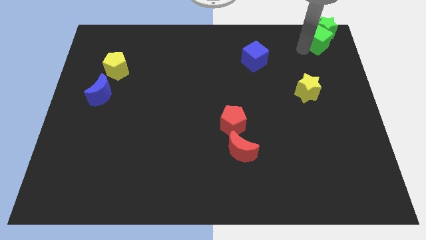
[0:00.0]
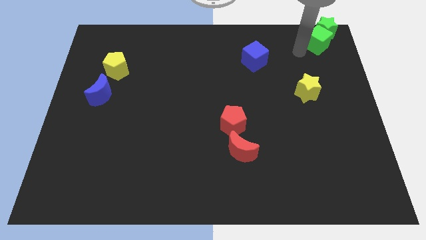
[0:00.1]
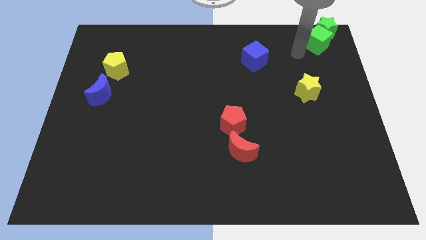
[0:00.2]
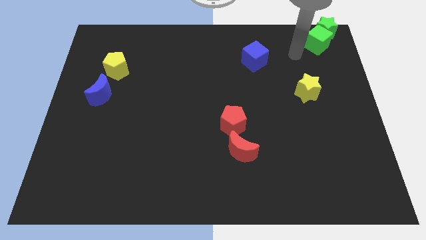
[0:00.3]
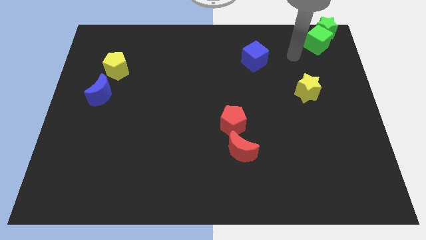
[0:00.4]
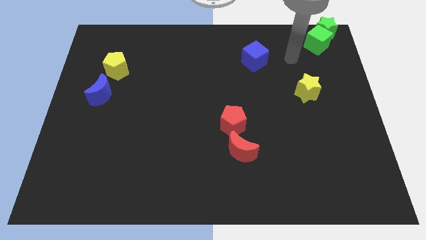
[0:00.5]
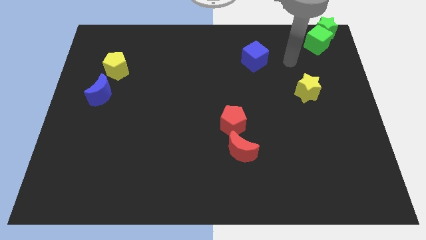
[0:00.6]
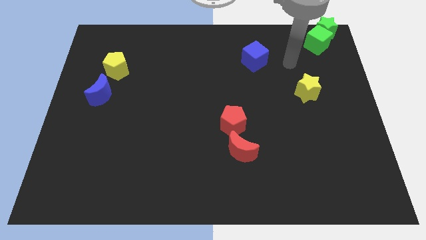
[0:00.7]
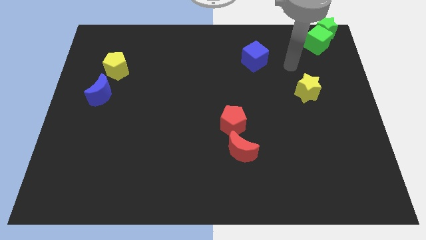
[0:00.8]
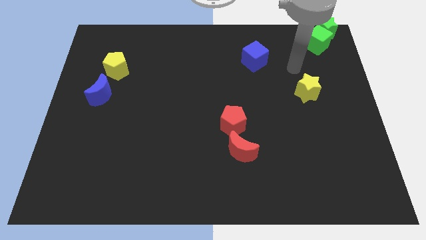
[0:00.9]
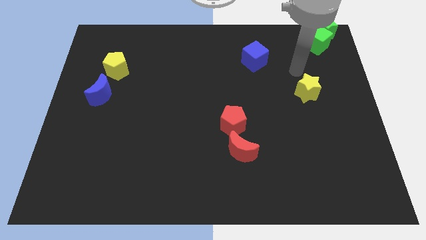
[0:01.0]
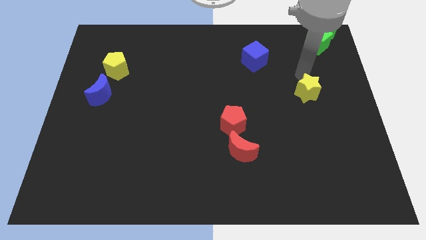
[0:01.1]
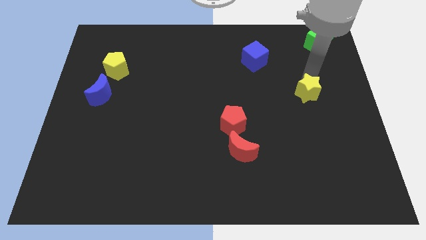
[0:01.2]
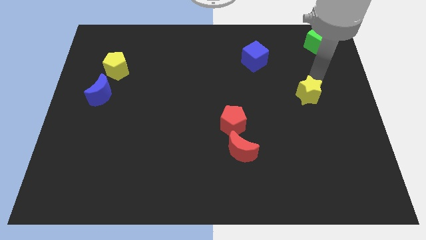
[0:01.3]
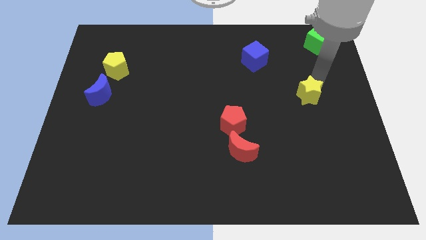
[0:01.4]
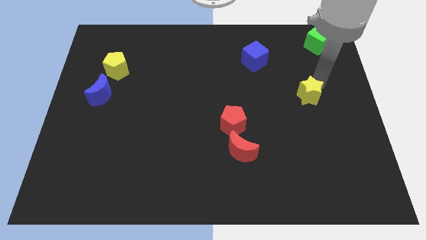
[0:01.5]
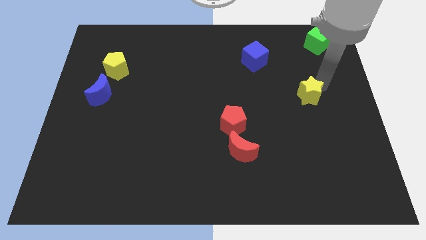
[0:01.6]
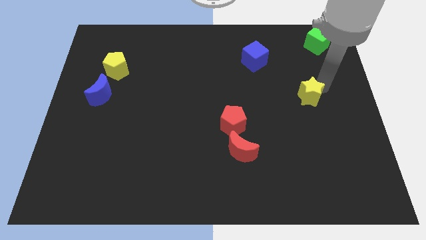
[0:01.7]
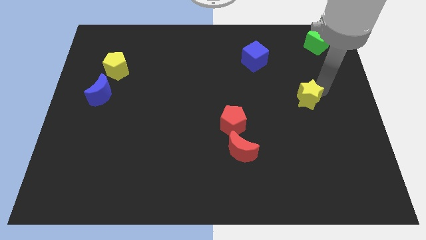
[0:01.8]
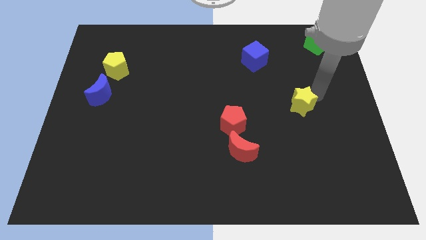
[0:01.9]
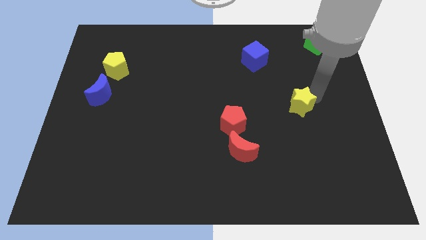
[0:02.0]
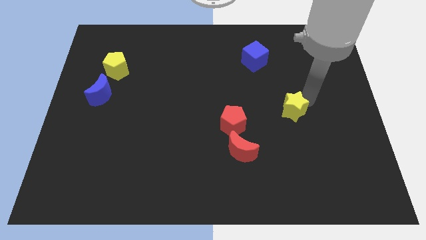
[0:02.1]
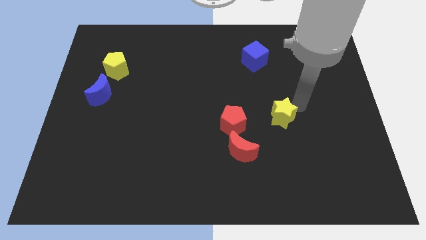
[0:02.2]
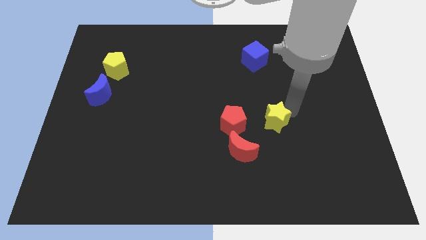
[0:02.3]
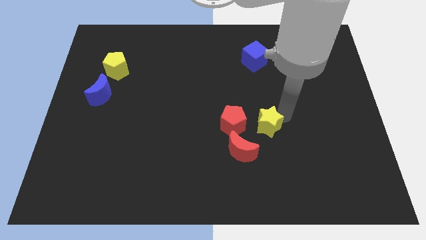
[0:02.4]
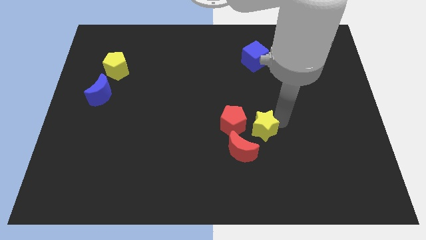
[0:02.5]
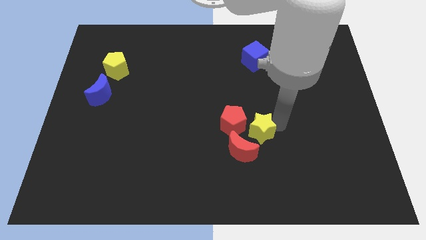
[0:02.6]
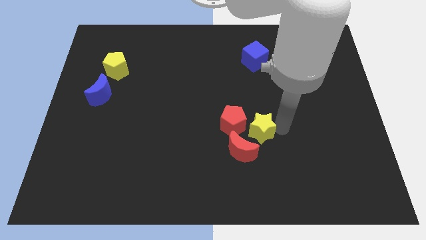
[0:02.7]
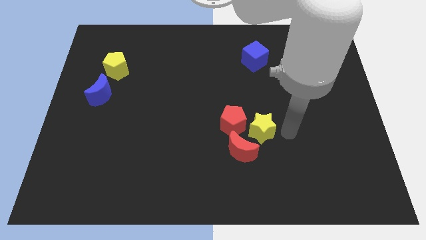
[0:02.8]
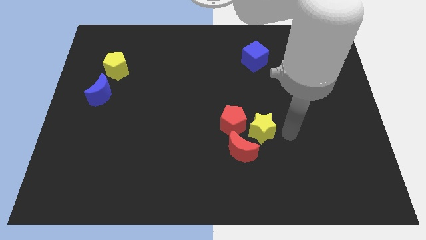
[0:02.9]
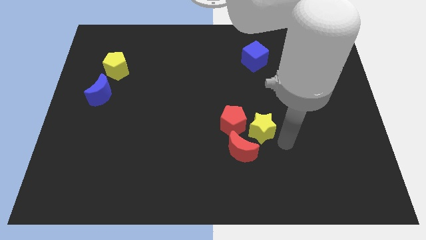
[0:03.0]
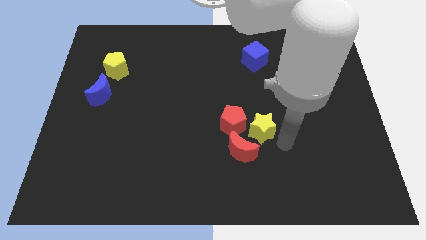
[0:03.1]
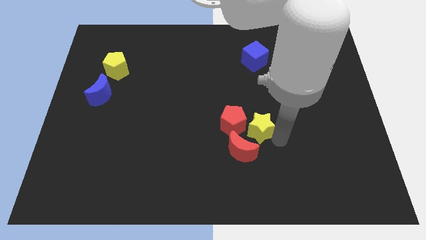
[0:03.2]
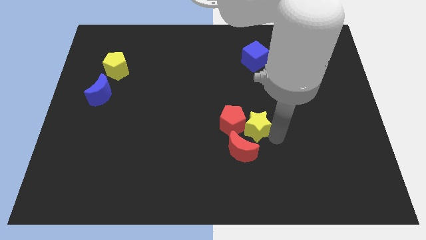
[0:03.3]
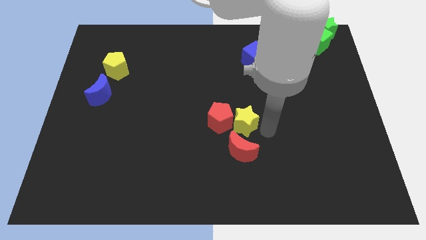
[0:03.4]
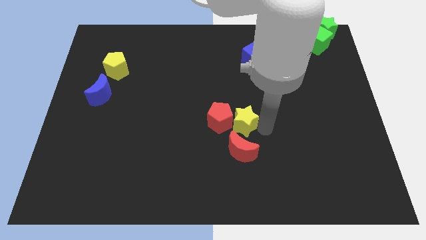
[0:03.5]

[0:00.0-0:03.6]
move the yellow star into the right side of the red pentagon

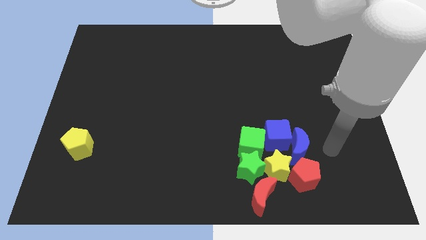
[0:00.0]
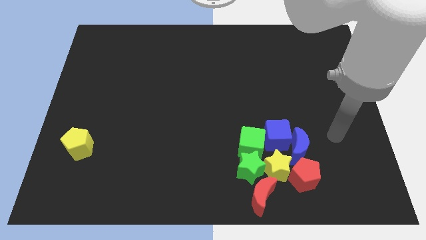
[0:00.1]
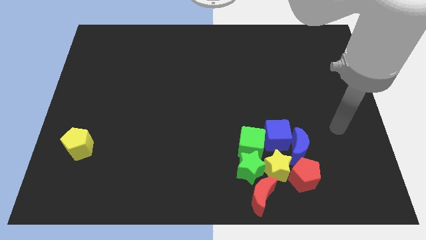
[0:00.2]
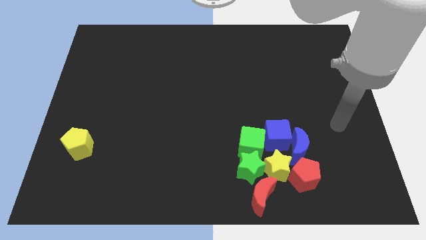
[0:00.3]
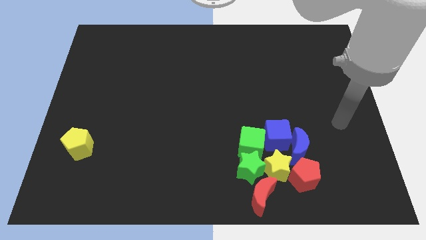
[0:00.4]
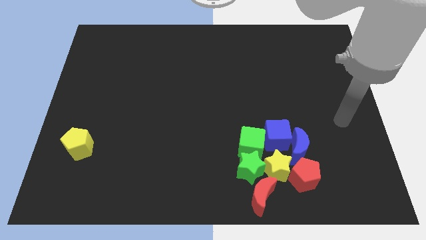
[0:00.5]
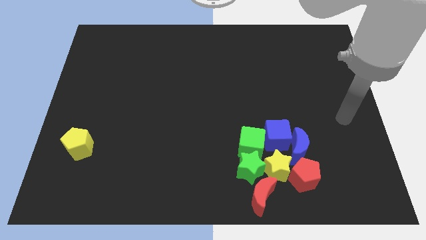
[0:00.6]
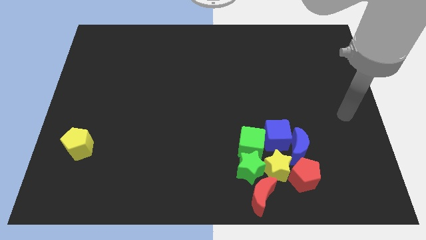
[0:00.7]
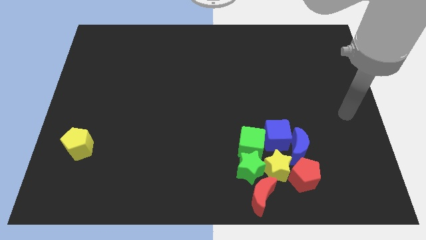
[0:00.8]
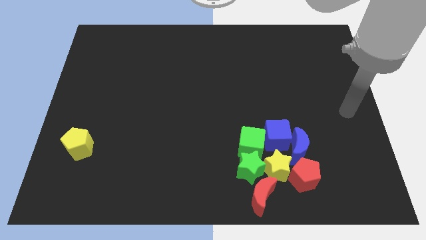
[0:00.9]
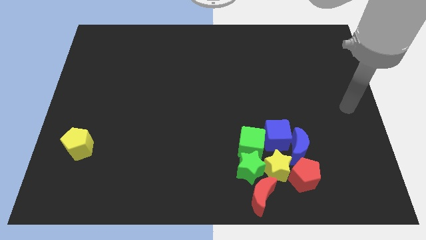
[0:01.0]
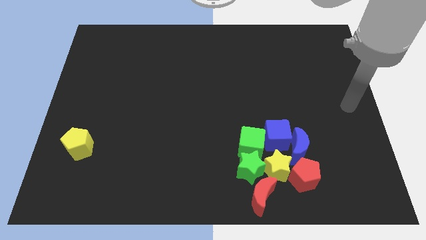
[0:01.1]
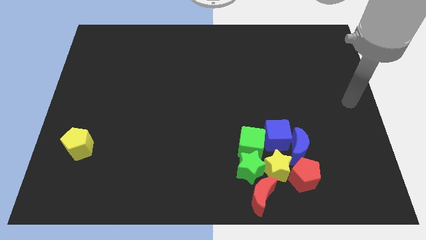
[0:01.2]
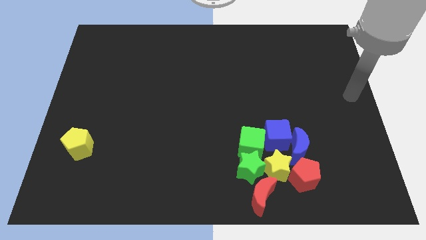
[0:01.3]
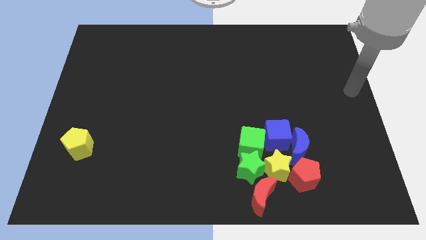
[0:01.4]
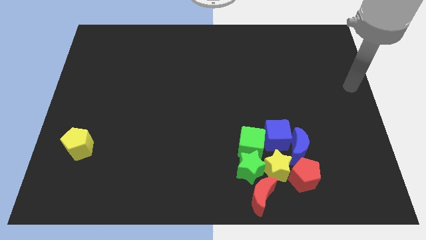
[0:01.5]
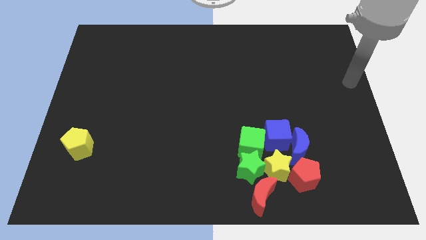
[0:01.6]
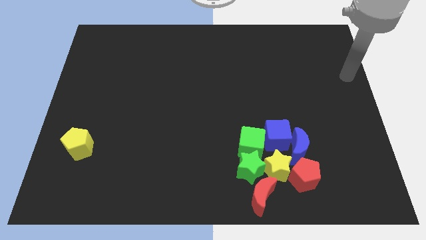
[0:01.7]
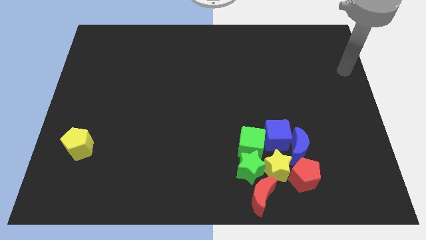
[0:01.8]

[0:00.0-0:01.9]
move your arm from the bottom right to the top right side

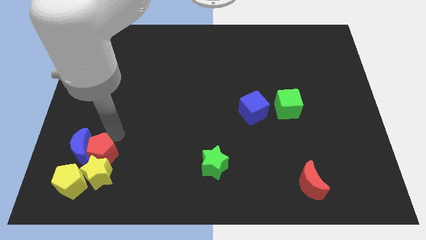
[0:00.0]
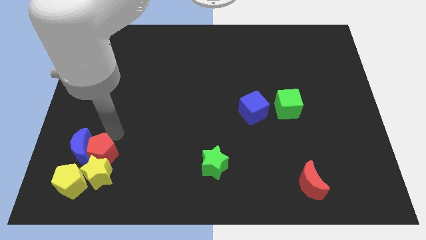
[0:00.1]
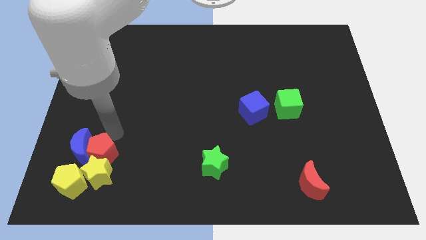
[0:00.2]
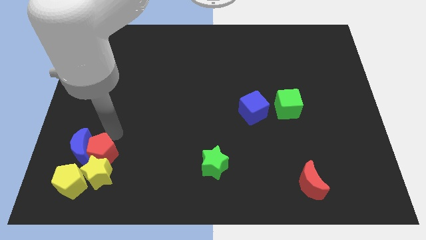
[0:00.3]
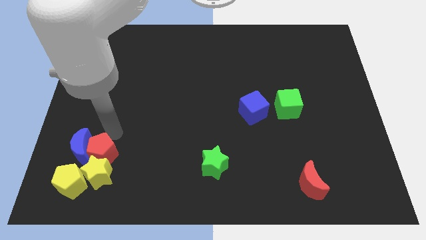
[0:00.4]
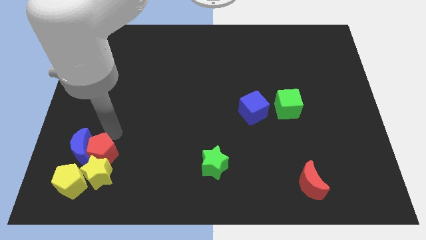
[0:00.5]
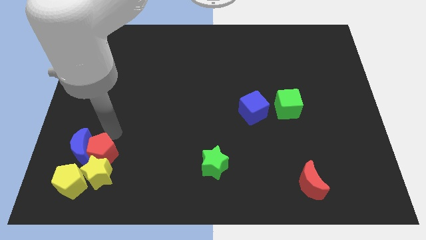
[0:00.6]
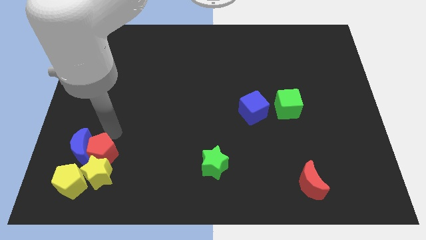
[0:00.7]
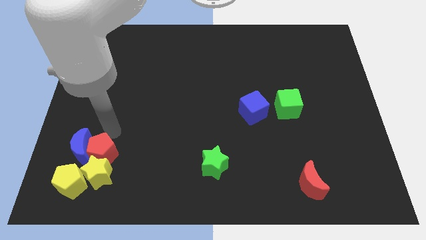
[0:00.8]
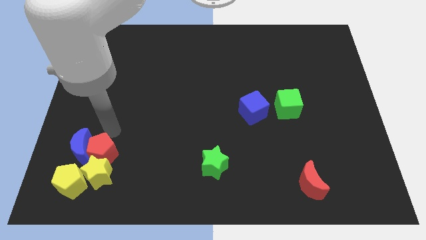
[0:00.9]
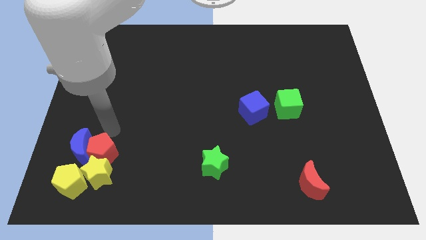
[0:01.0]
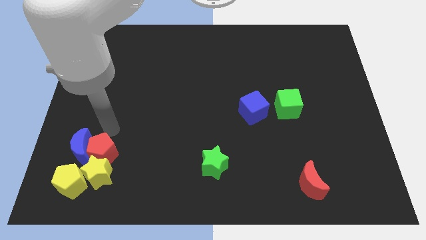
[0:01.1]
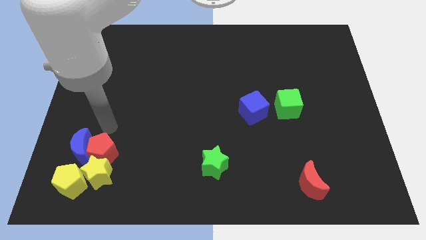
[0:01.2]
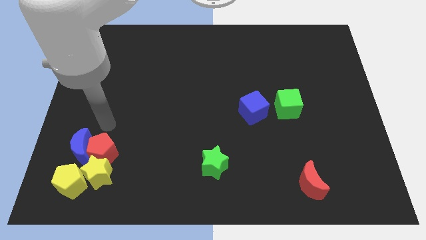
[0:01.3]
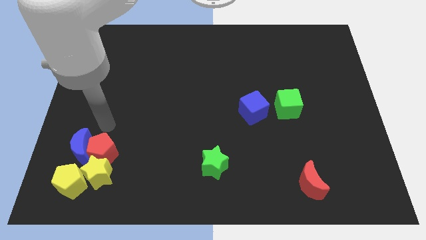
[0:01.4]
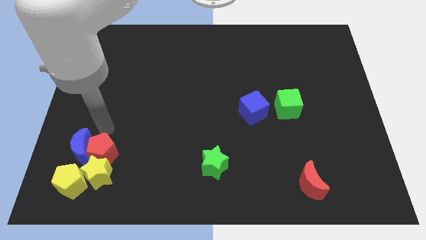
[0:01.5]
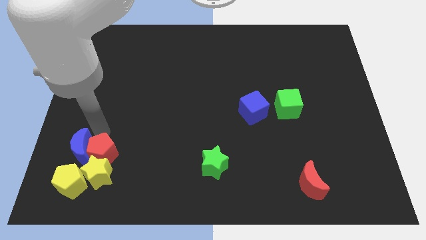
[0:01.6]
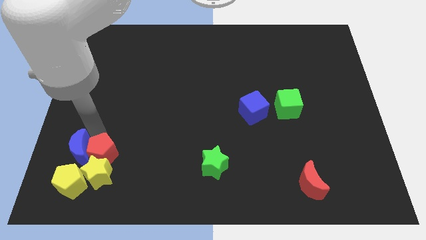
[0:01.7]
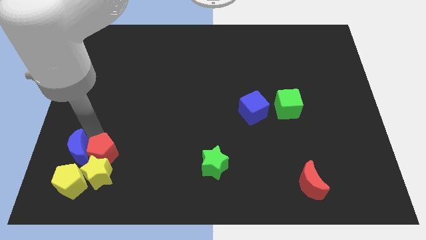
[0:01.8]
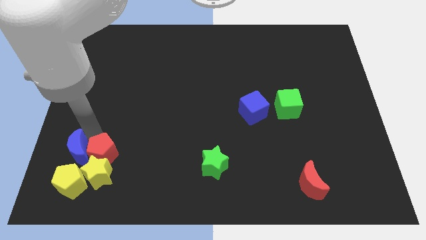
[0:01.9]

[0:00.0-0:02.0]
push the group of blocks to the bottom left corner of the board

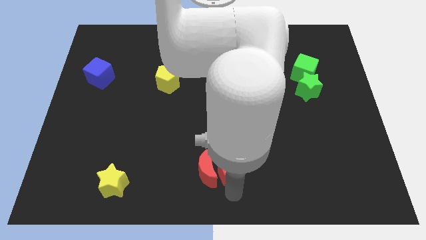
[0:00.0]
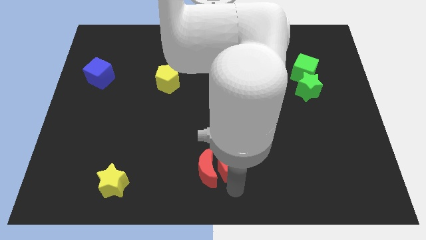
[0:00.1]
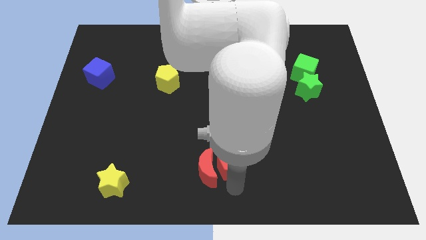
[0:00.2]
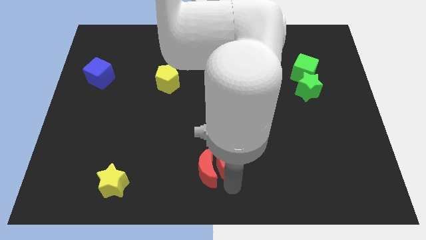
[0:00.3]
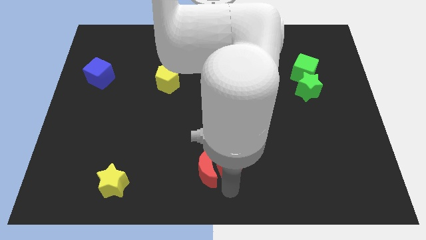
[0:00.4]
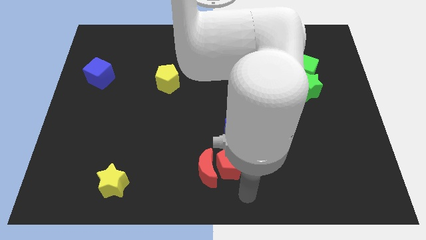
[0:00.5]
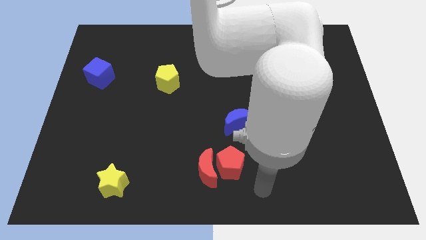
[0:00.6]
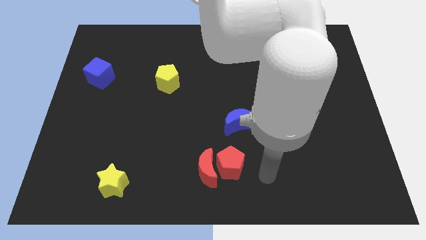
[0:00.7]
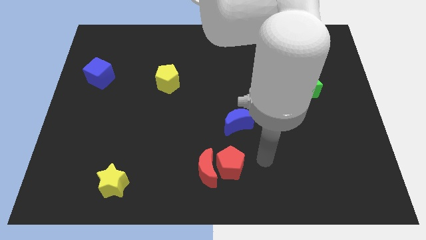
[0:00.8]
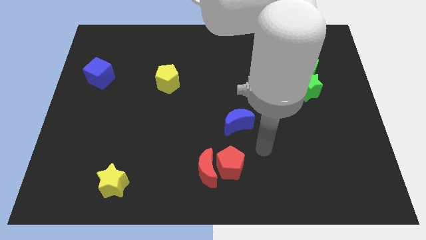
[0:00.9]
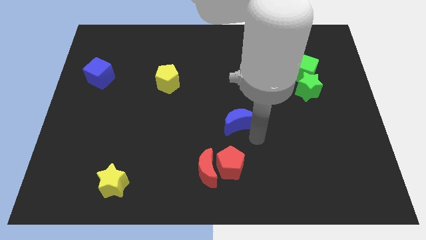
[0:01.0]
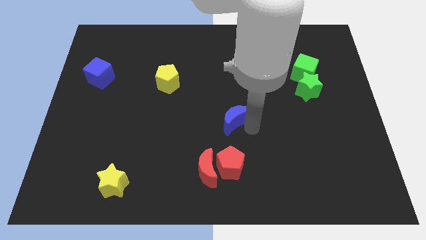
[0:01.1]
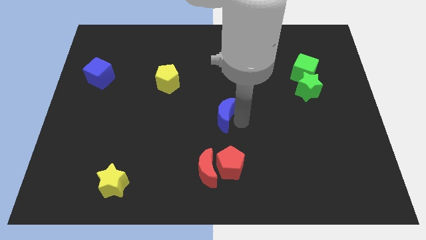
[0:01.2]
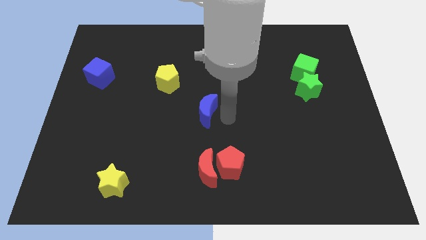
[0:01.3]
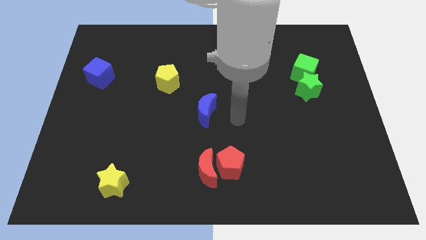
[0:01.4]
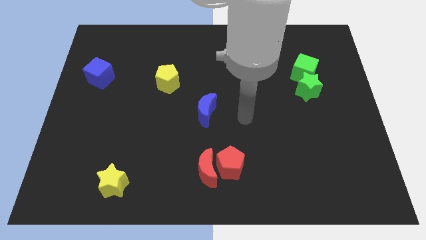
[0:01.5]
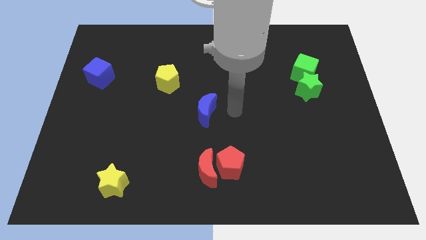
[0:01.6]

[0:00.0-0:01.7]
move the blue crescent towards the center
